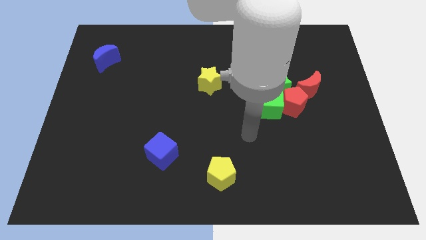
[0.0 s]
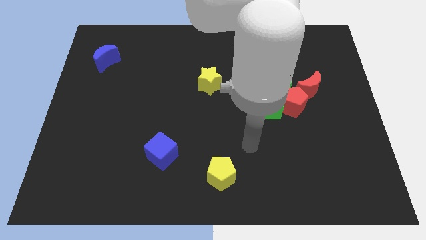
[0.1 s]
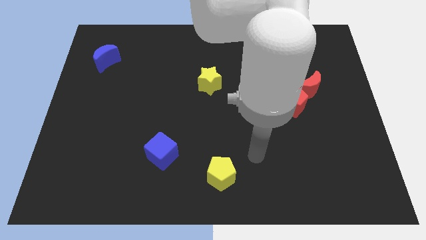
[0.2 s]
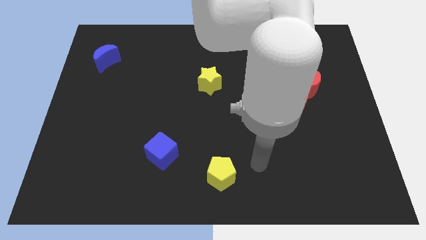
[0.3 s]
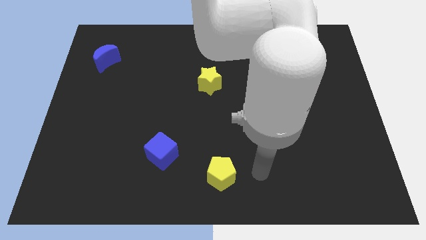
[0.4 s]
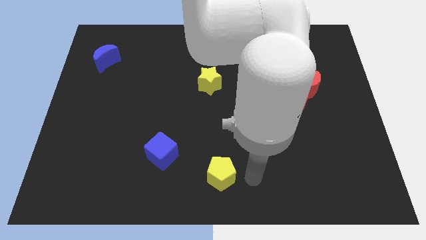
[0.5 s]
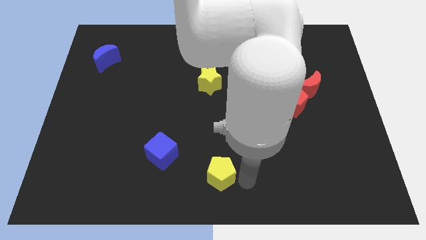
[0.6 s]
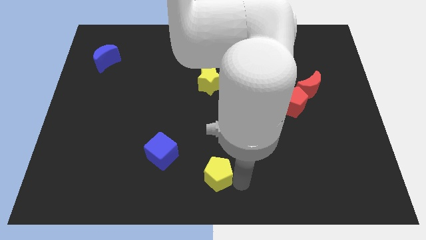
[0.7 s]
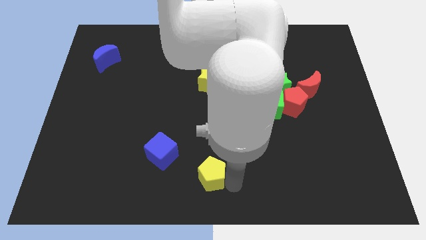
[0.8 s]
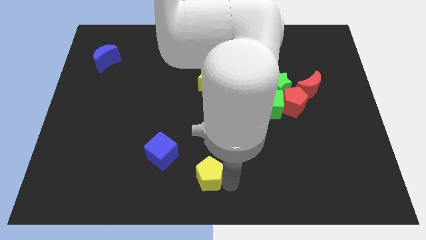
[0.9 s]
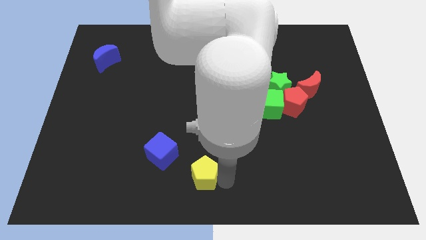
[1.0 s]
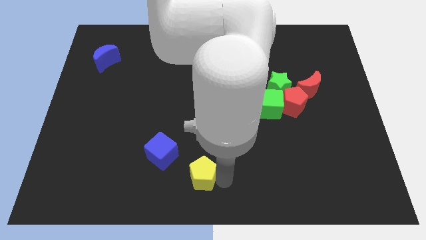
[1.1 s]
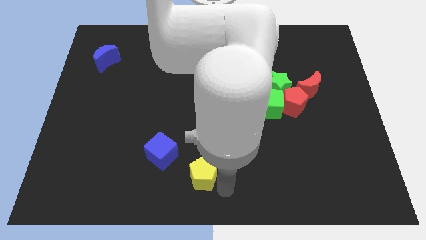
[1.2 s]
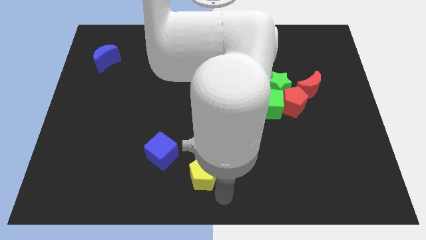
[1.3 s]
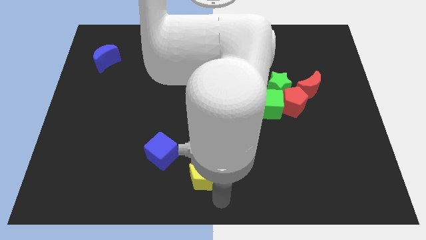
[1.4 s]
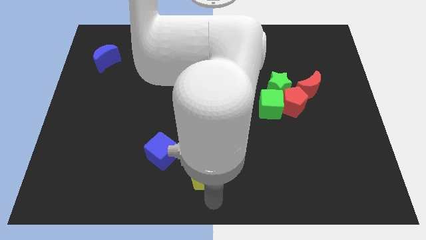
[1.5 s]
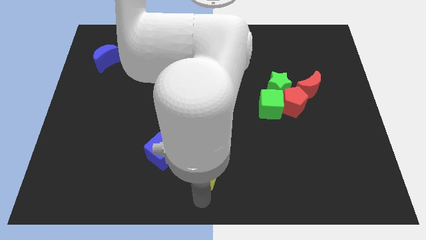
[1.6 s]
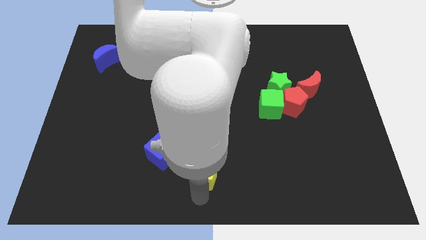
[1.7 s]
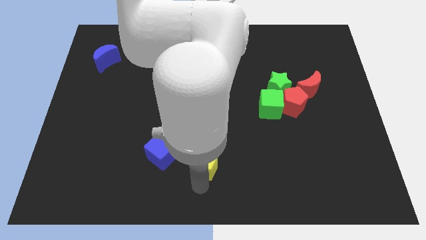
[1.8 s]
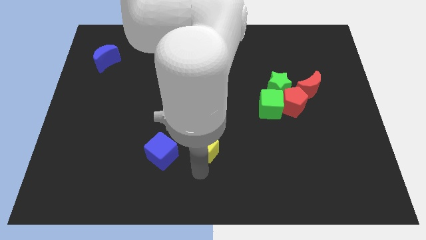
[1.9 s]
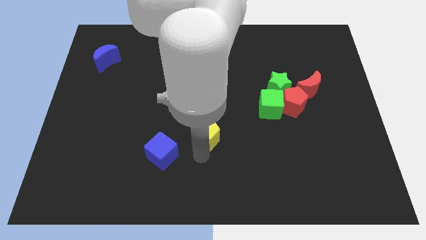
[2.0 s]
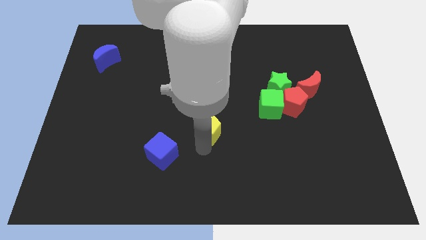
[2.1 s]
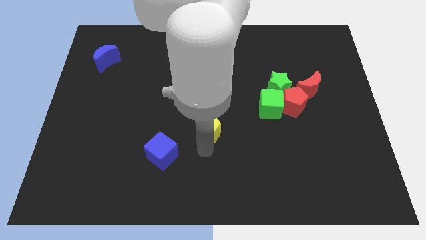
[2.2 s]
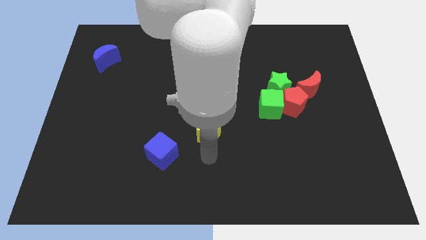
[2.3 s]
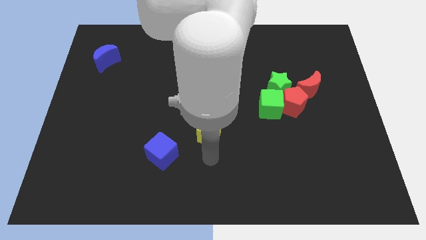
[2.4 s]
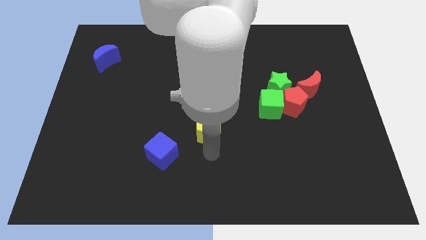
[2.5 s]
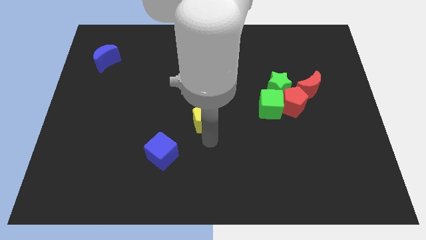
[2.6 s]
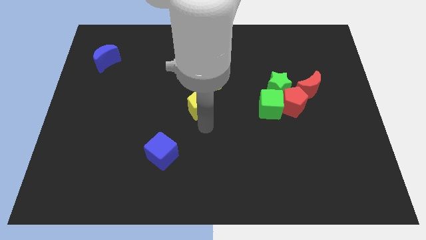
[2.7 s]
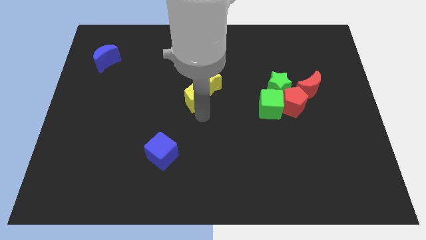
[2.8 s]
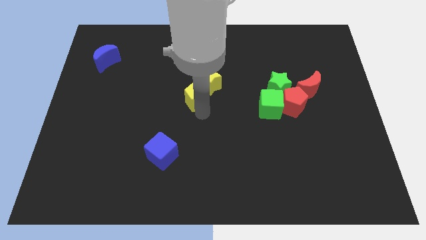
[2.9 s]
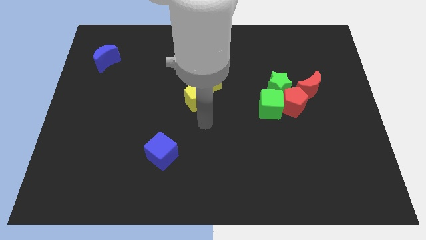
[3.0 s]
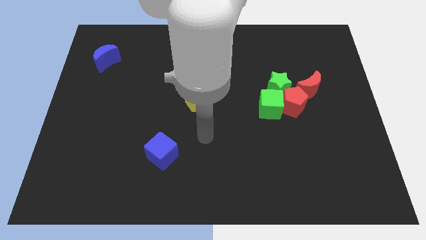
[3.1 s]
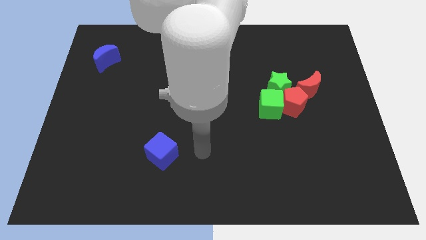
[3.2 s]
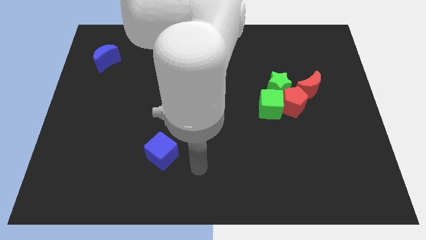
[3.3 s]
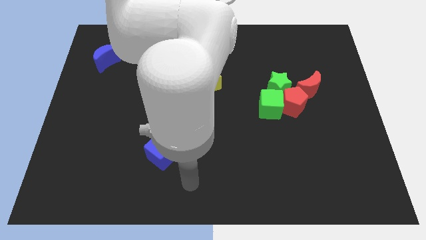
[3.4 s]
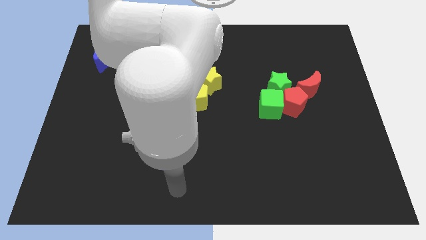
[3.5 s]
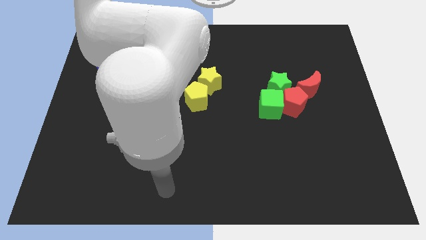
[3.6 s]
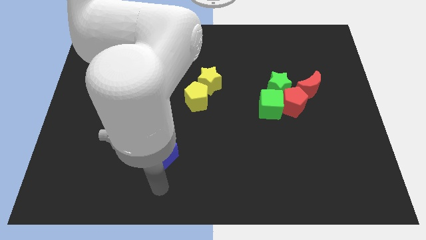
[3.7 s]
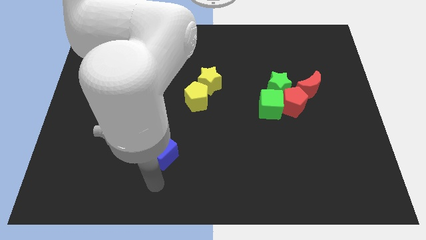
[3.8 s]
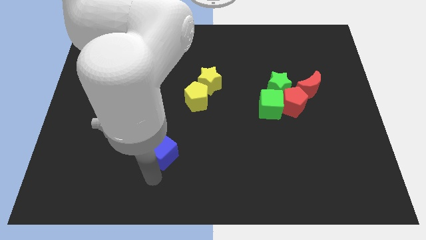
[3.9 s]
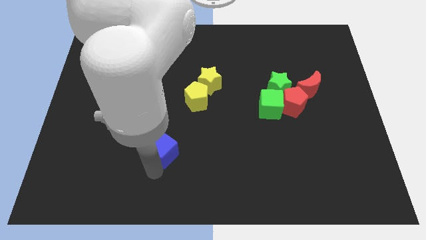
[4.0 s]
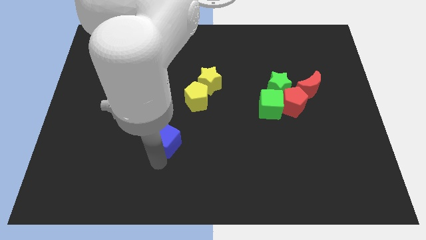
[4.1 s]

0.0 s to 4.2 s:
slide the yellow pentagon at the left side bottom of the yellow star

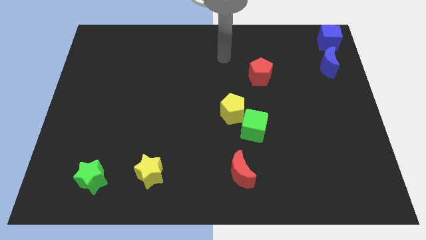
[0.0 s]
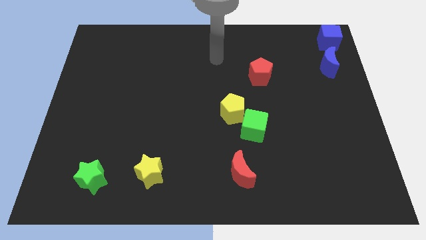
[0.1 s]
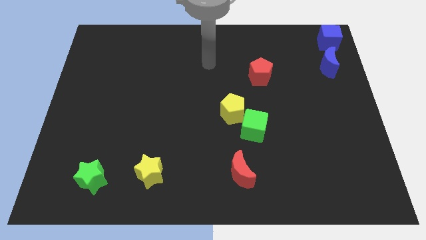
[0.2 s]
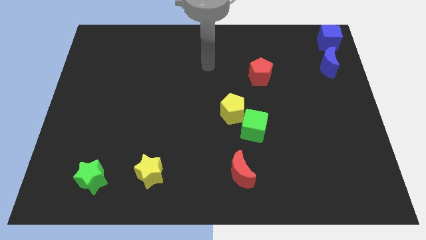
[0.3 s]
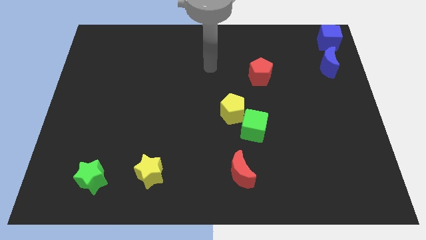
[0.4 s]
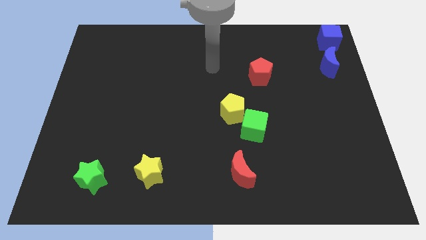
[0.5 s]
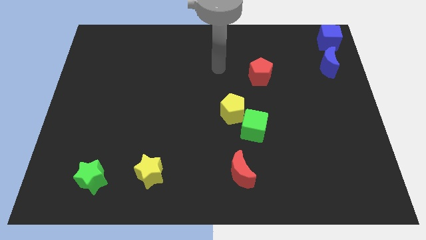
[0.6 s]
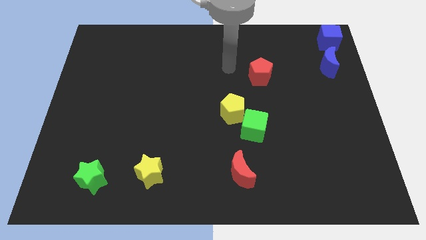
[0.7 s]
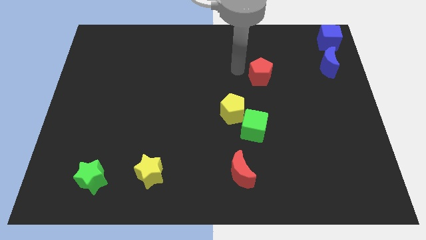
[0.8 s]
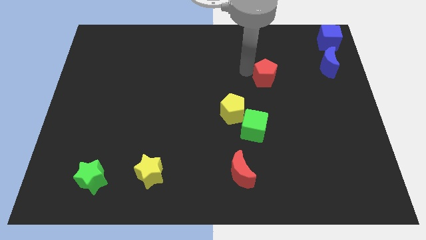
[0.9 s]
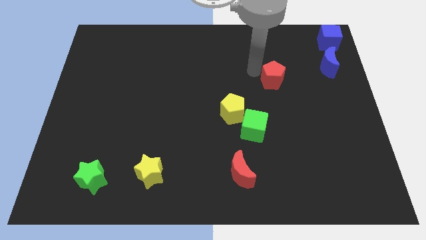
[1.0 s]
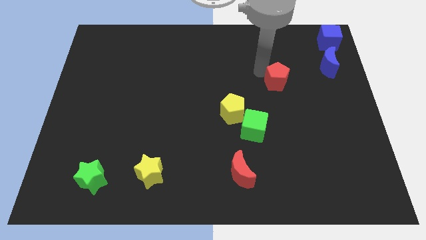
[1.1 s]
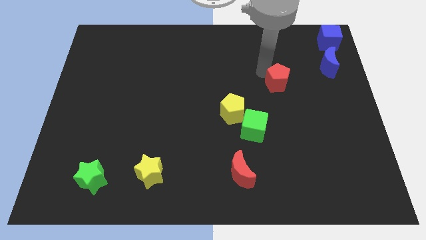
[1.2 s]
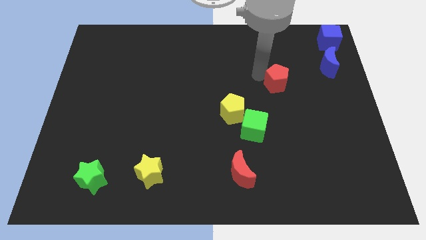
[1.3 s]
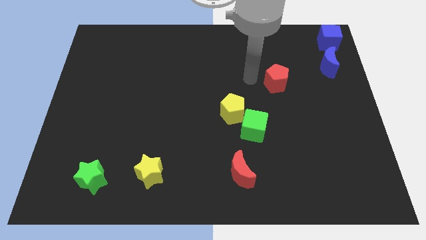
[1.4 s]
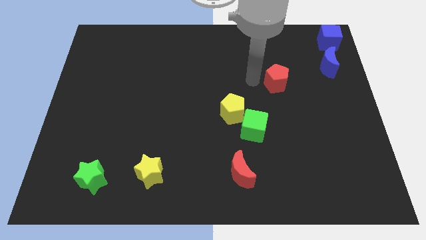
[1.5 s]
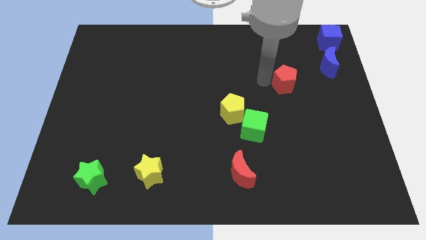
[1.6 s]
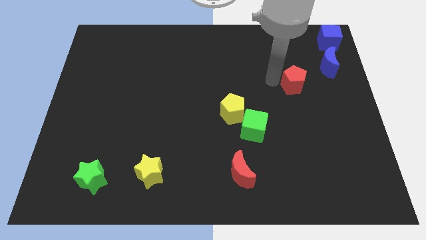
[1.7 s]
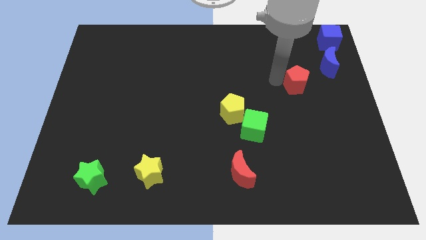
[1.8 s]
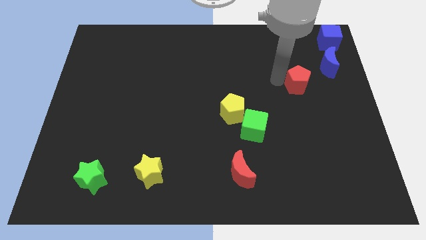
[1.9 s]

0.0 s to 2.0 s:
slide the red pentagon towards the blue moon

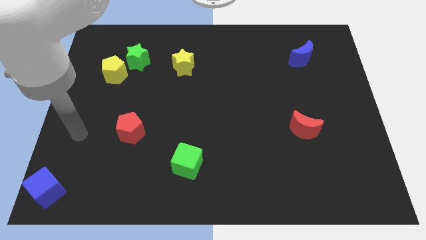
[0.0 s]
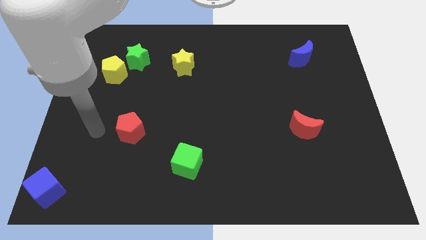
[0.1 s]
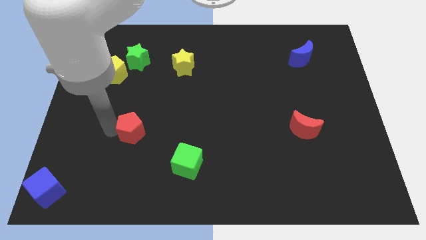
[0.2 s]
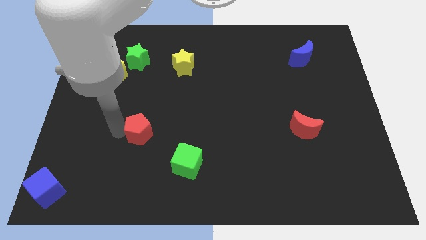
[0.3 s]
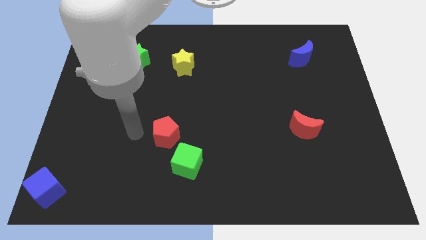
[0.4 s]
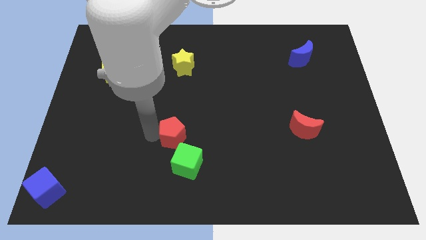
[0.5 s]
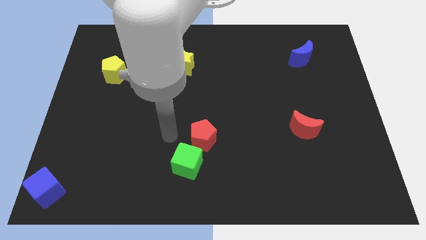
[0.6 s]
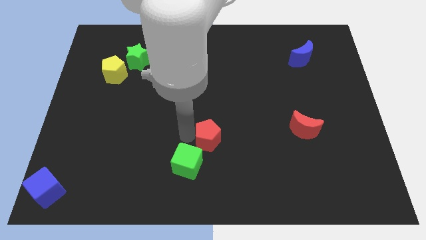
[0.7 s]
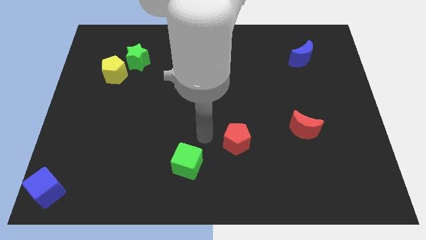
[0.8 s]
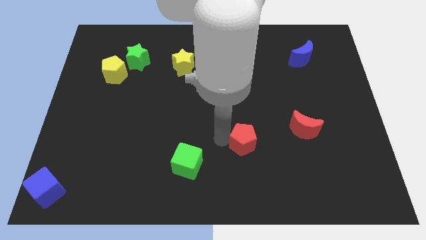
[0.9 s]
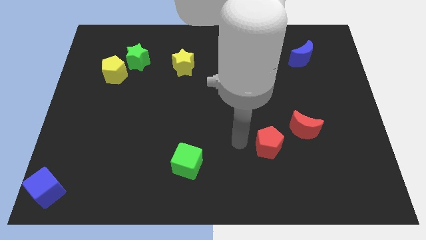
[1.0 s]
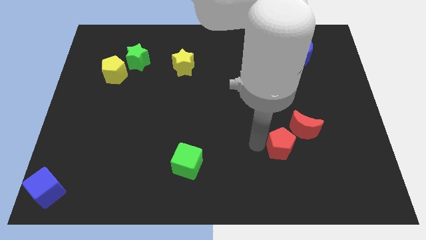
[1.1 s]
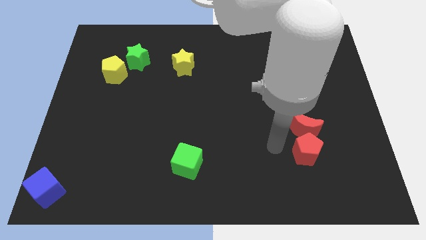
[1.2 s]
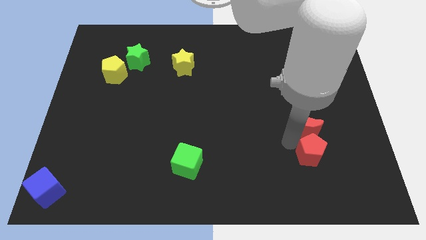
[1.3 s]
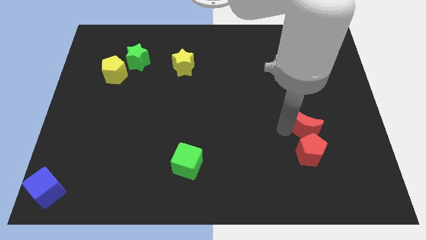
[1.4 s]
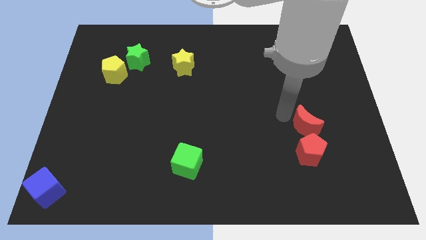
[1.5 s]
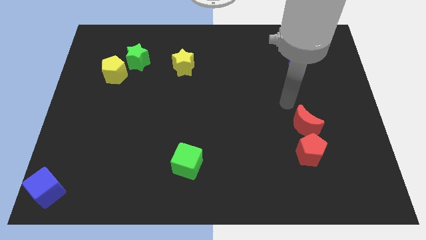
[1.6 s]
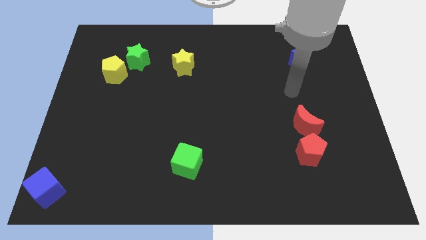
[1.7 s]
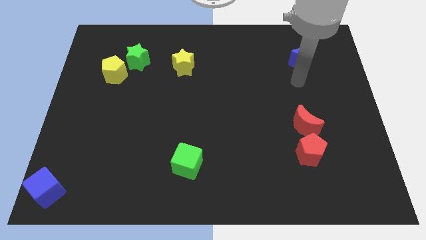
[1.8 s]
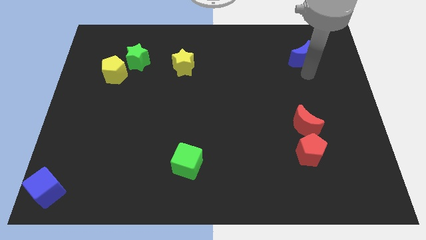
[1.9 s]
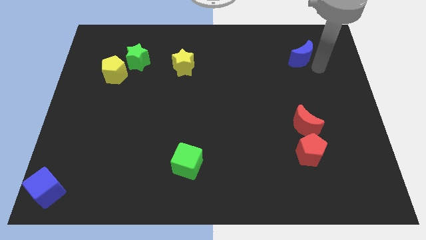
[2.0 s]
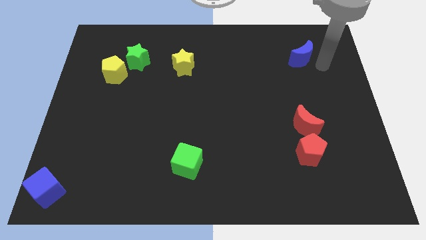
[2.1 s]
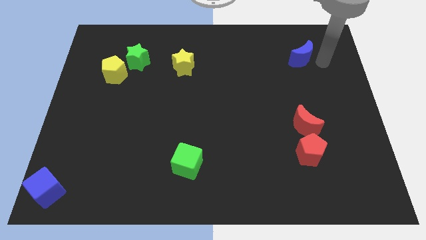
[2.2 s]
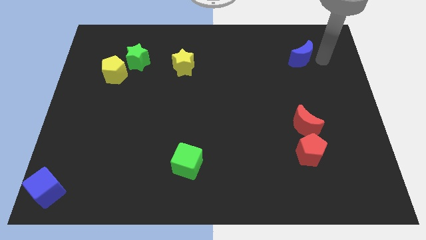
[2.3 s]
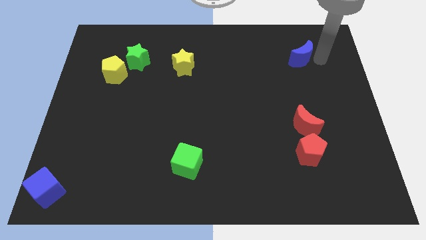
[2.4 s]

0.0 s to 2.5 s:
place the red pentagon below the red crescent

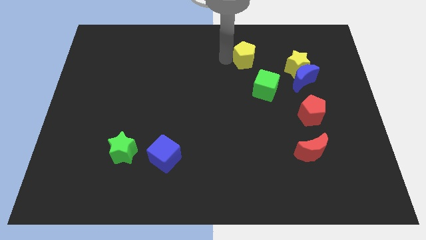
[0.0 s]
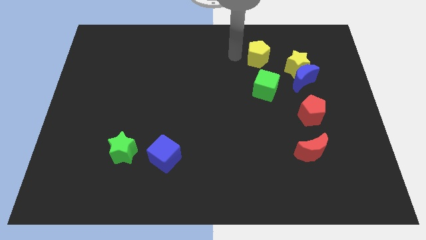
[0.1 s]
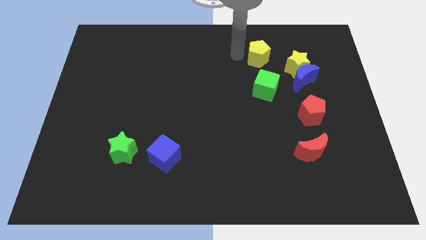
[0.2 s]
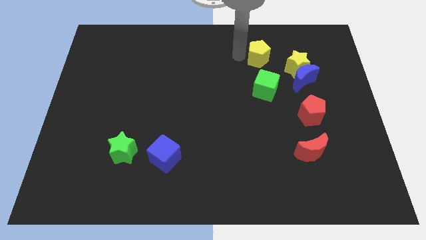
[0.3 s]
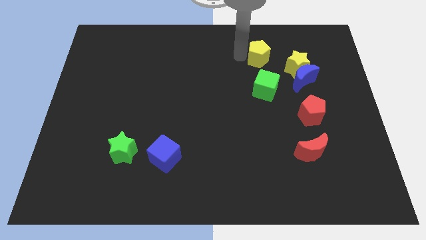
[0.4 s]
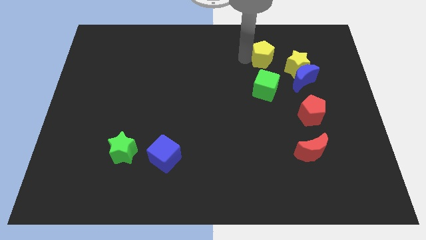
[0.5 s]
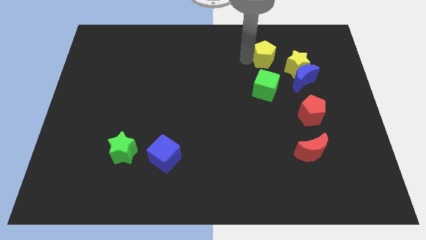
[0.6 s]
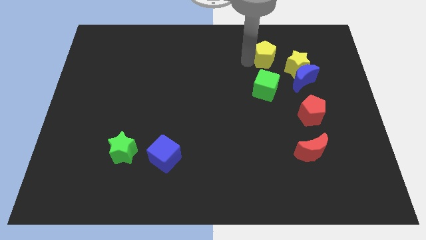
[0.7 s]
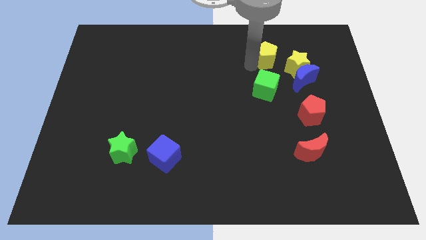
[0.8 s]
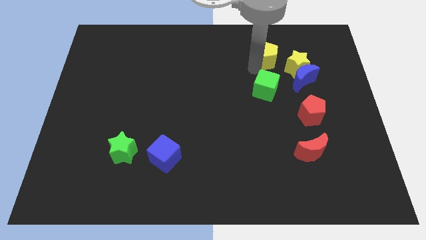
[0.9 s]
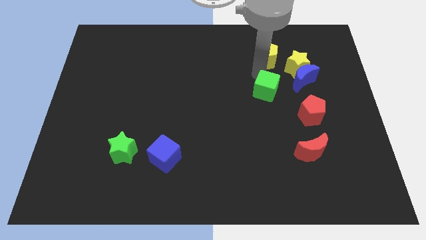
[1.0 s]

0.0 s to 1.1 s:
place the yellow pentagon on top of green cube
